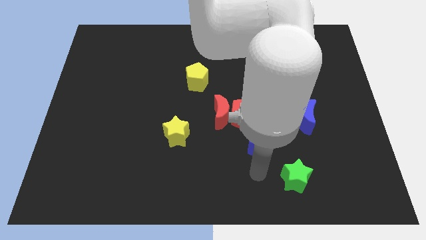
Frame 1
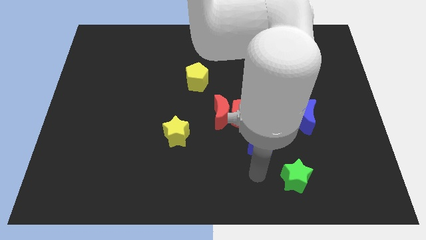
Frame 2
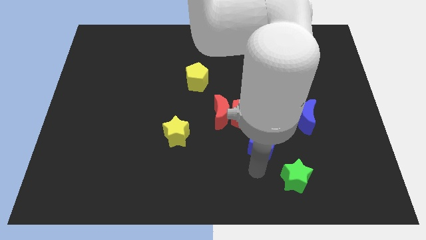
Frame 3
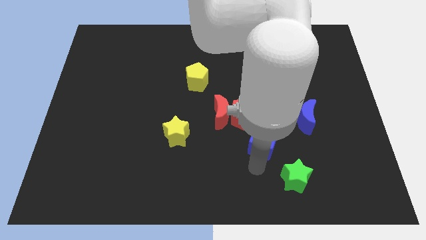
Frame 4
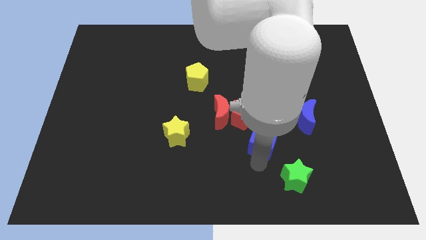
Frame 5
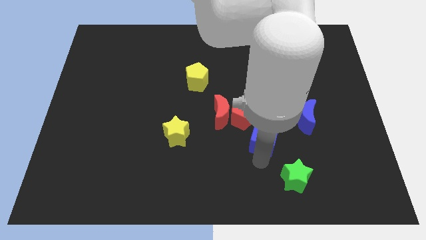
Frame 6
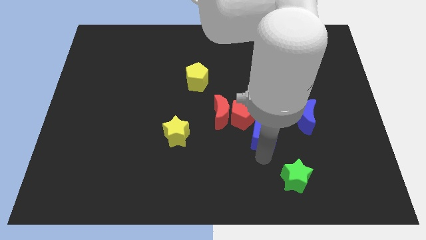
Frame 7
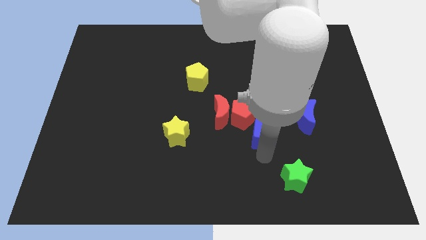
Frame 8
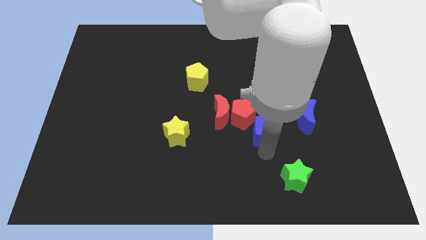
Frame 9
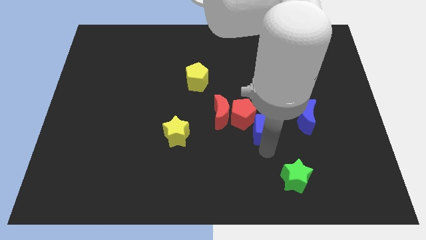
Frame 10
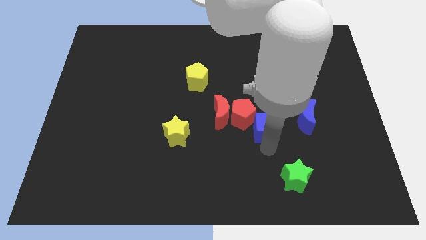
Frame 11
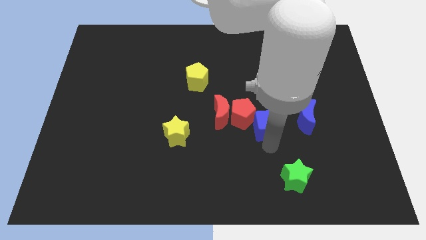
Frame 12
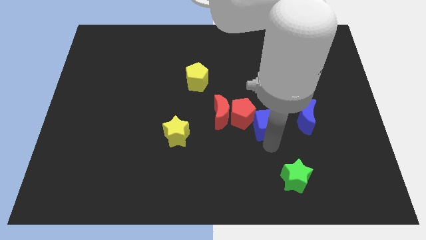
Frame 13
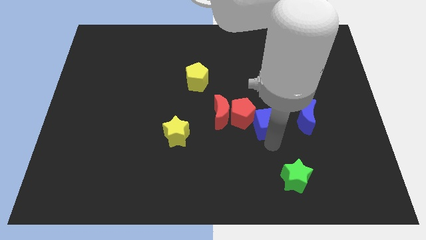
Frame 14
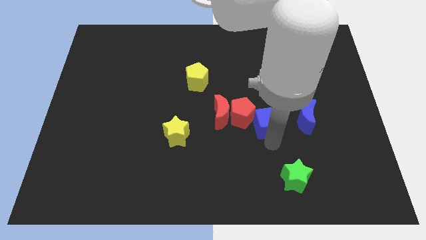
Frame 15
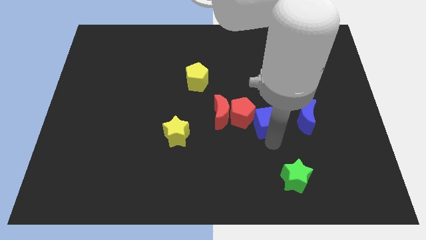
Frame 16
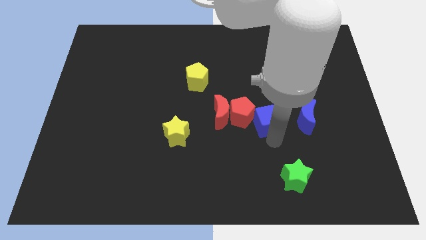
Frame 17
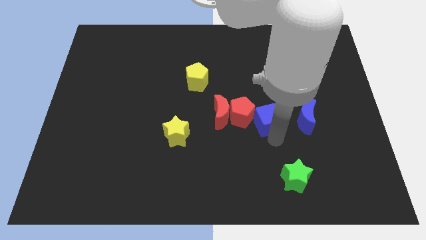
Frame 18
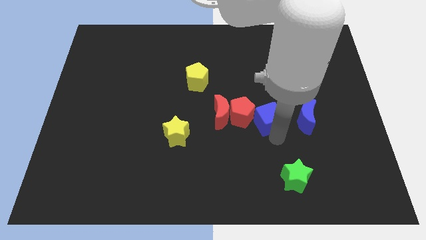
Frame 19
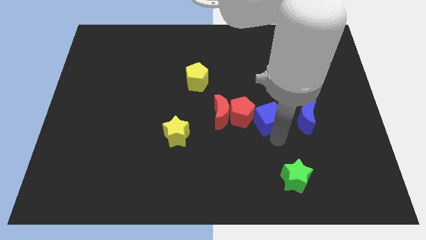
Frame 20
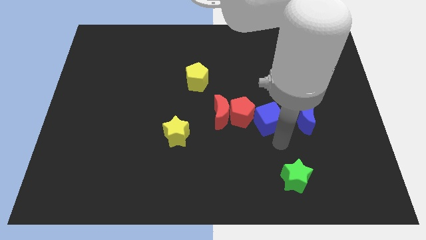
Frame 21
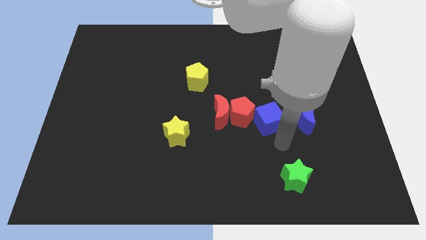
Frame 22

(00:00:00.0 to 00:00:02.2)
place the blue cube in between the blue moon and the red pentagon

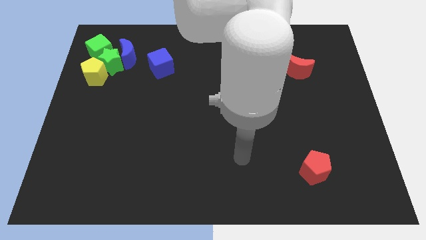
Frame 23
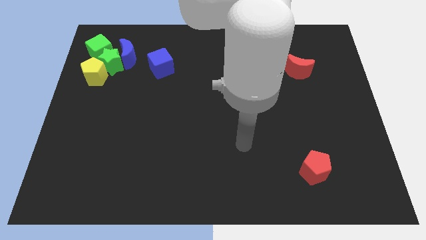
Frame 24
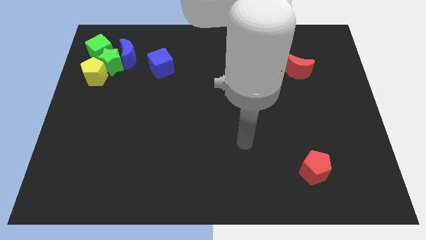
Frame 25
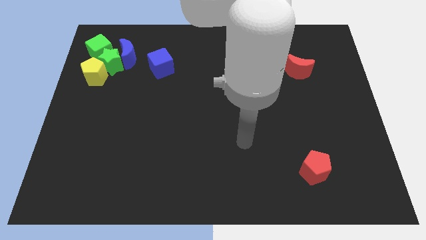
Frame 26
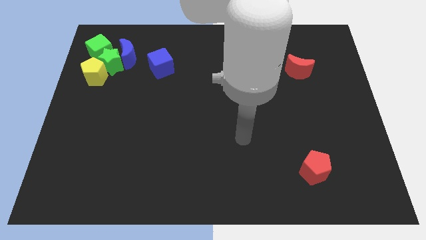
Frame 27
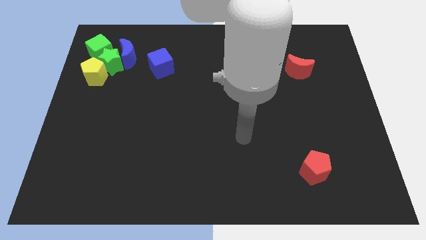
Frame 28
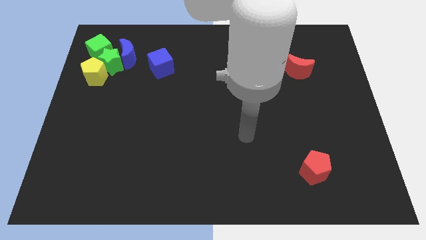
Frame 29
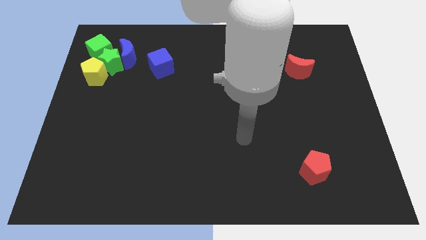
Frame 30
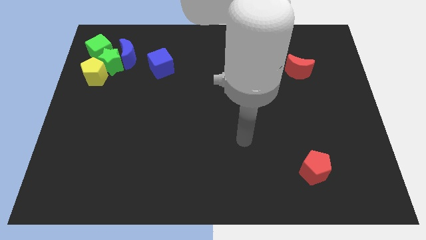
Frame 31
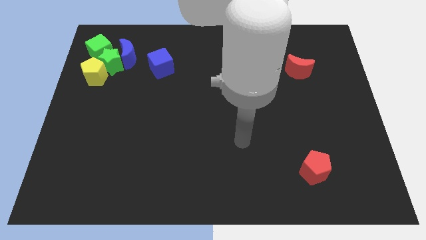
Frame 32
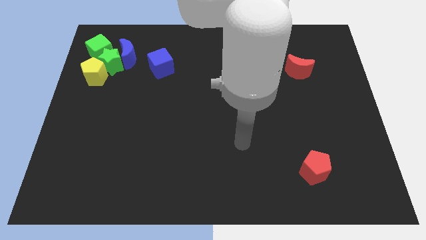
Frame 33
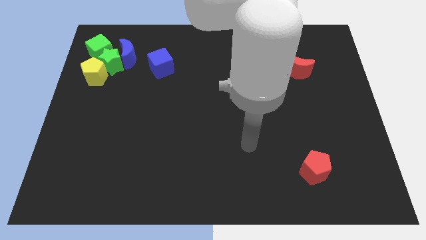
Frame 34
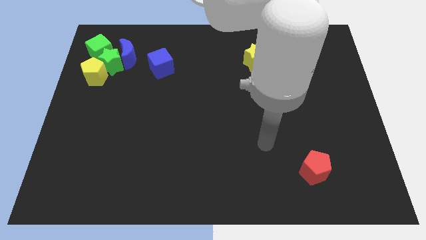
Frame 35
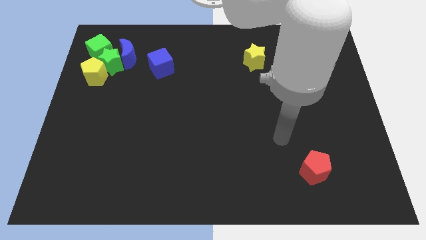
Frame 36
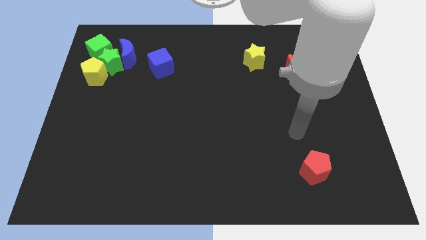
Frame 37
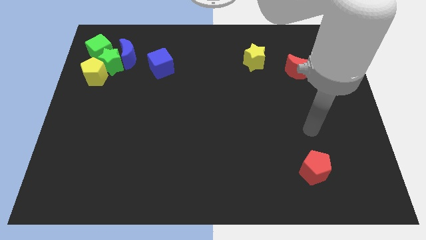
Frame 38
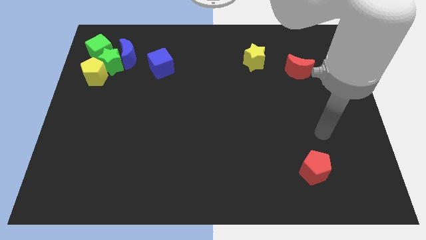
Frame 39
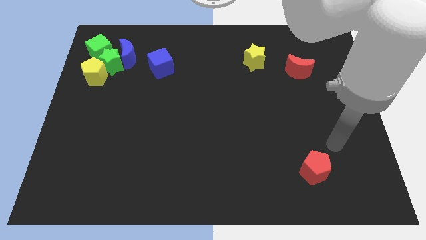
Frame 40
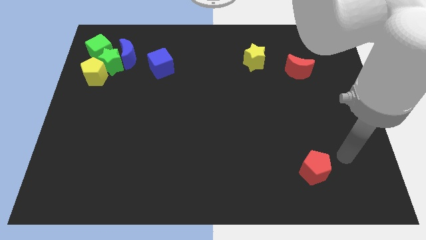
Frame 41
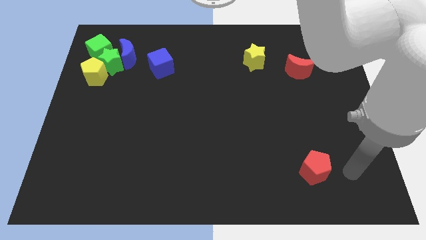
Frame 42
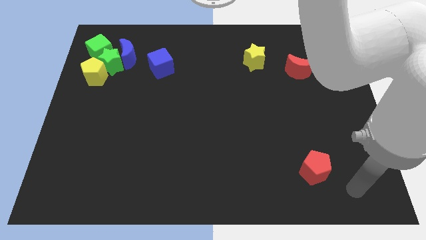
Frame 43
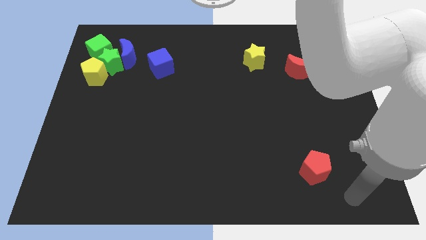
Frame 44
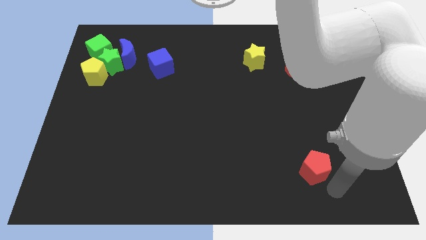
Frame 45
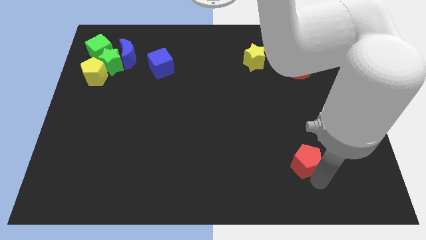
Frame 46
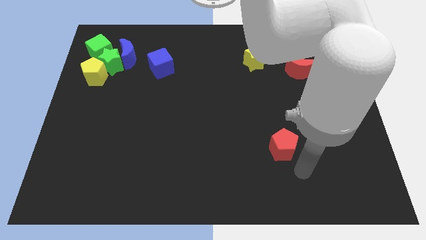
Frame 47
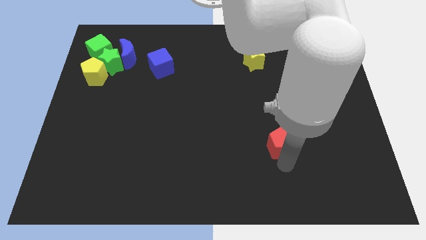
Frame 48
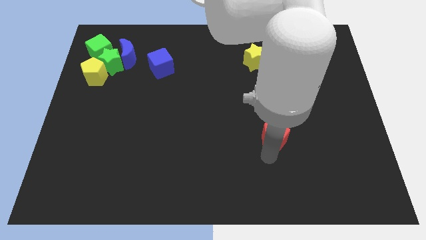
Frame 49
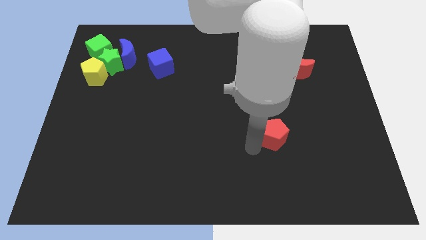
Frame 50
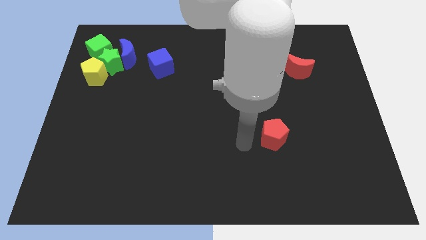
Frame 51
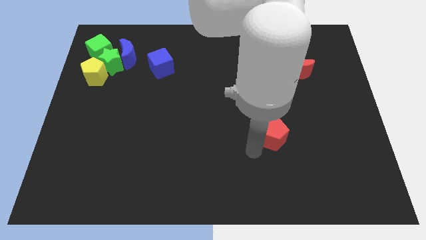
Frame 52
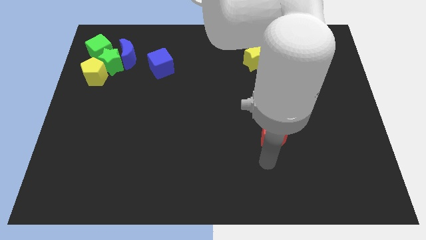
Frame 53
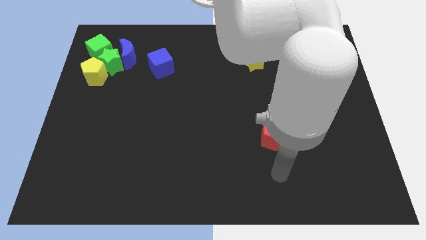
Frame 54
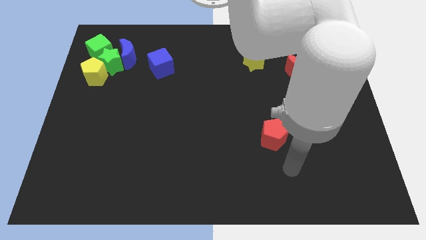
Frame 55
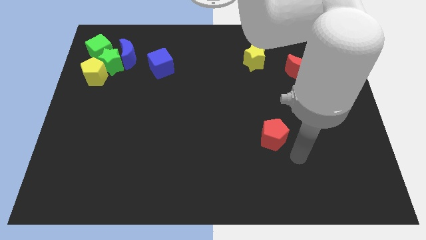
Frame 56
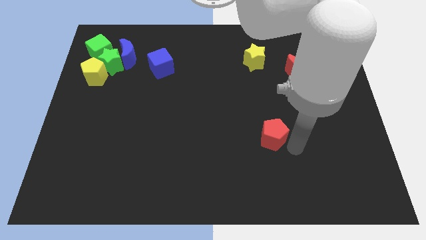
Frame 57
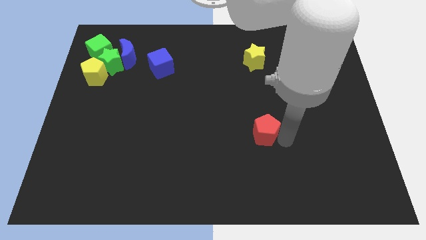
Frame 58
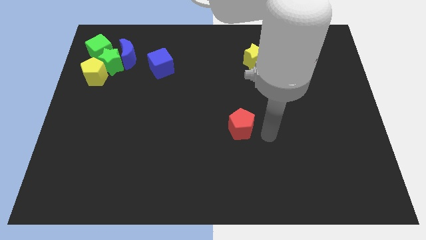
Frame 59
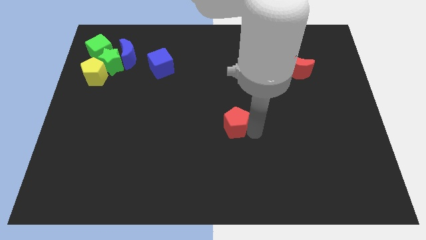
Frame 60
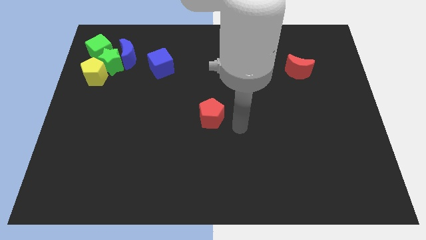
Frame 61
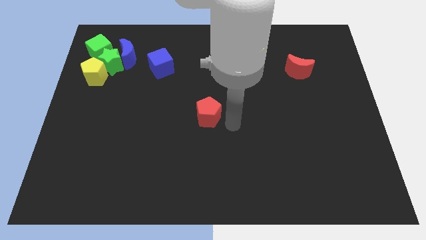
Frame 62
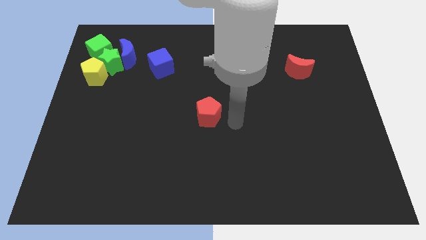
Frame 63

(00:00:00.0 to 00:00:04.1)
push the red pentagon to the center of the board

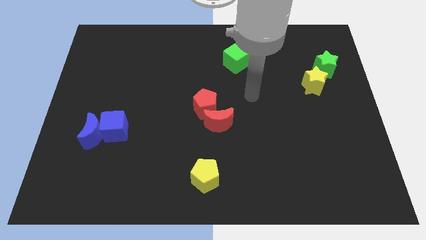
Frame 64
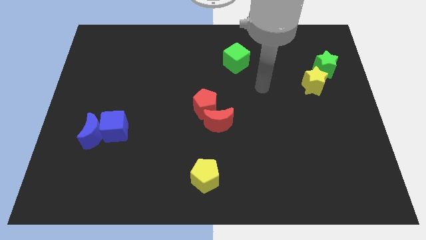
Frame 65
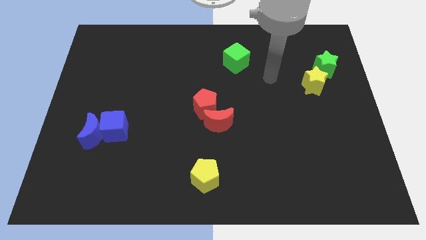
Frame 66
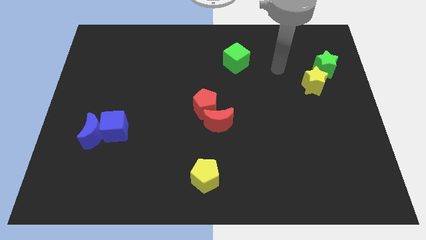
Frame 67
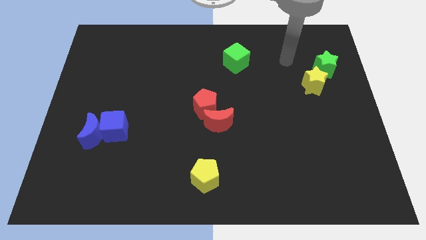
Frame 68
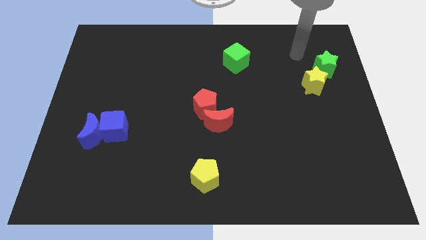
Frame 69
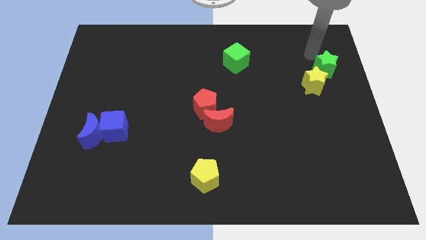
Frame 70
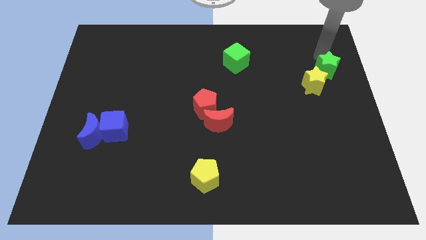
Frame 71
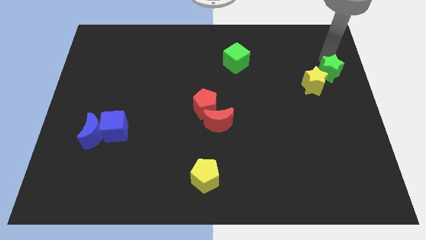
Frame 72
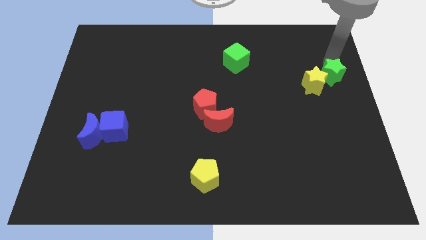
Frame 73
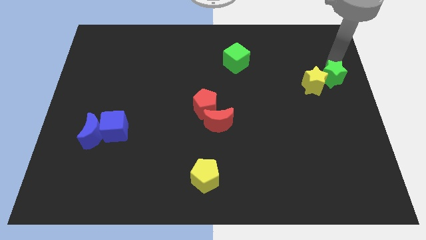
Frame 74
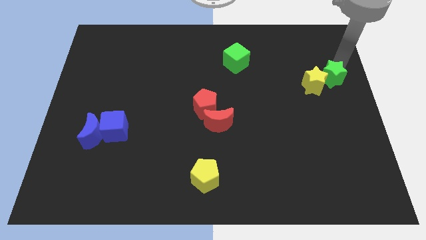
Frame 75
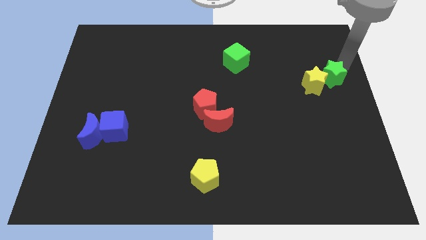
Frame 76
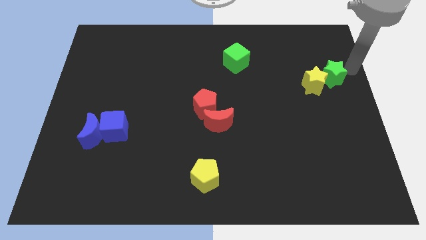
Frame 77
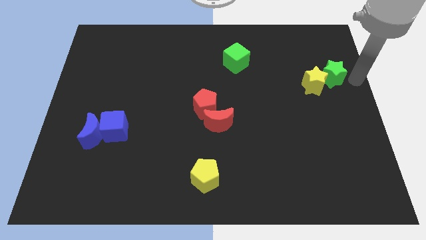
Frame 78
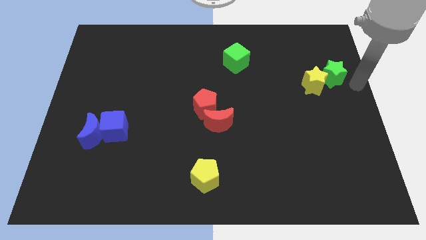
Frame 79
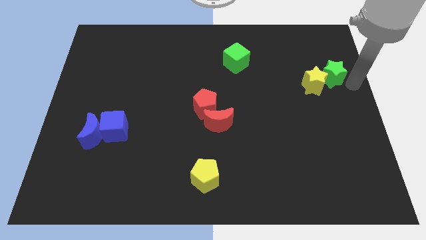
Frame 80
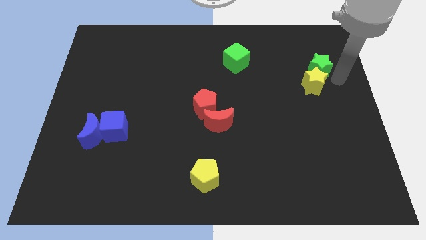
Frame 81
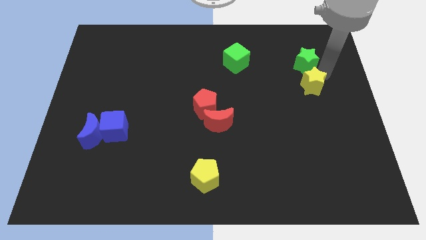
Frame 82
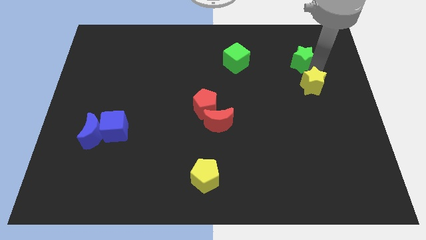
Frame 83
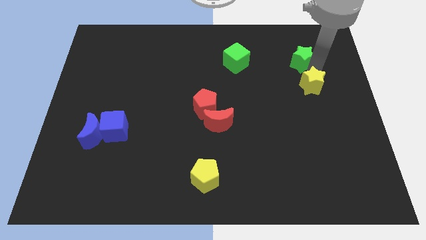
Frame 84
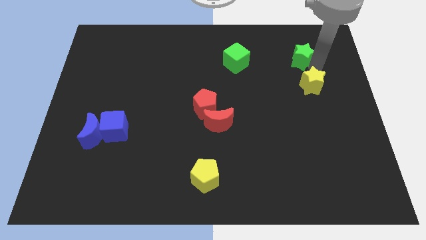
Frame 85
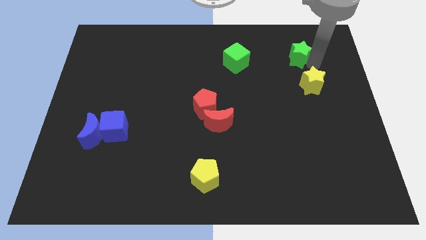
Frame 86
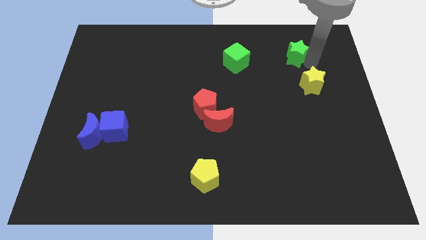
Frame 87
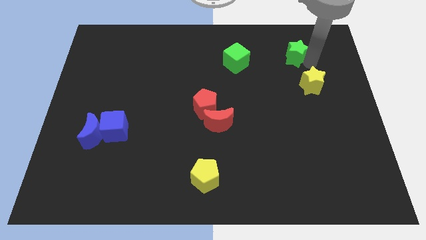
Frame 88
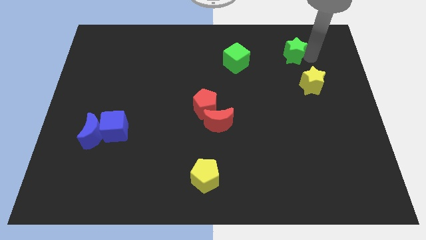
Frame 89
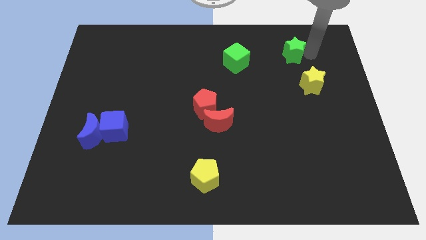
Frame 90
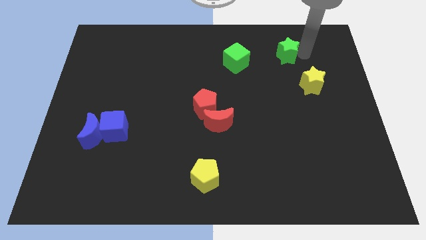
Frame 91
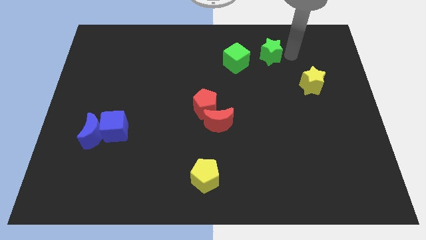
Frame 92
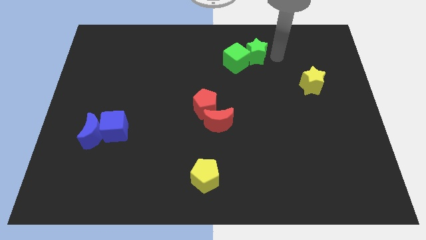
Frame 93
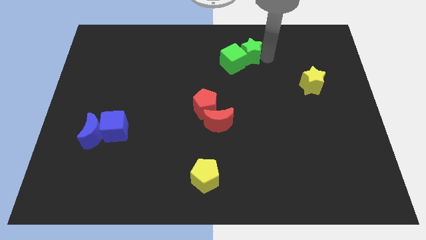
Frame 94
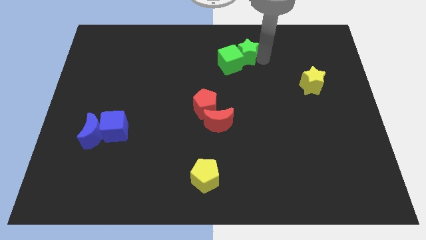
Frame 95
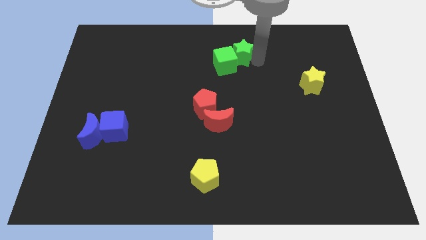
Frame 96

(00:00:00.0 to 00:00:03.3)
push the green star into the green cube
